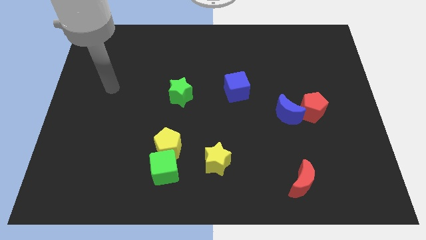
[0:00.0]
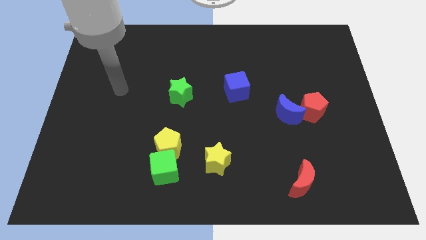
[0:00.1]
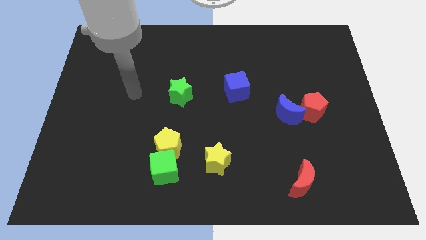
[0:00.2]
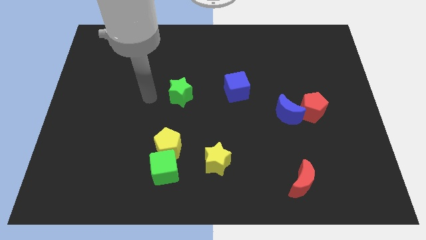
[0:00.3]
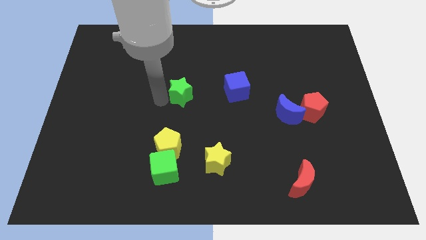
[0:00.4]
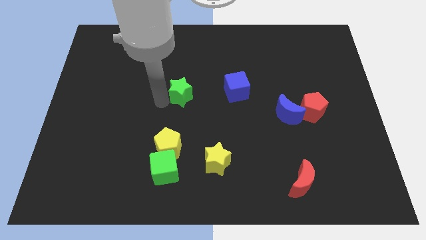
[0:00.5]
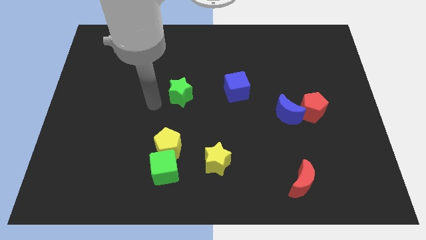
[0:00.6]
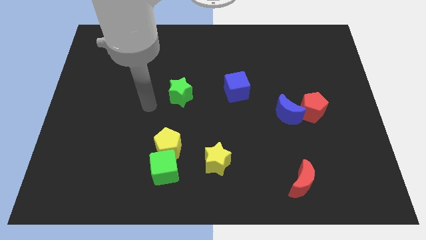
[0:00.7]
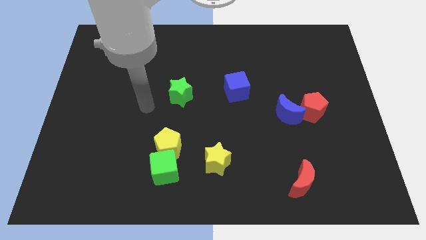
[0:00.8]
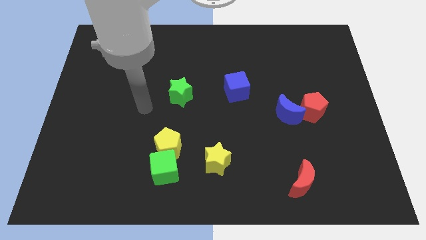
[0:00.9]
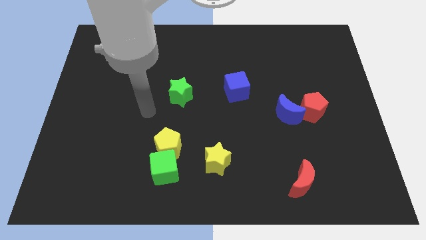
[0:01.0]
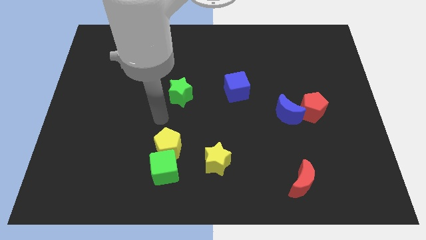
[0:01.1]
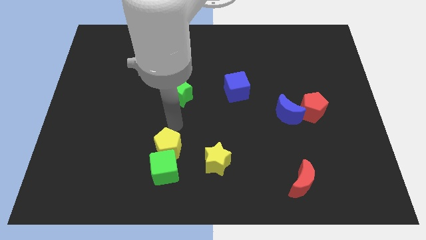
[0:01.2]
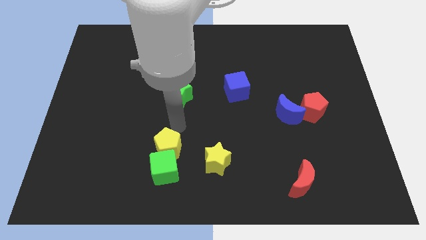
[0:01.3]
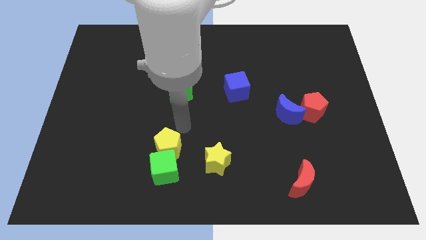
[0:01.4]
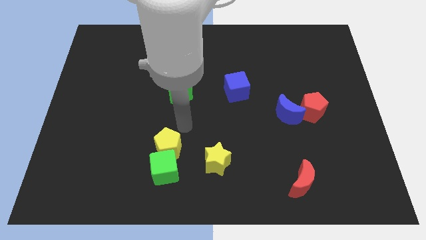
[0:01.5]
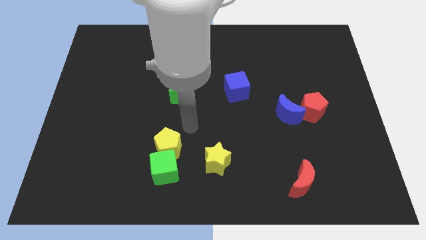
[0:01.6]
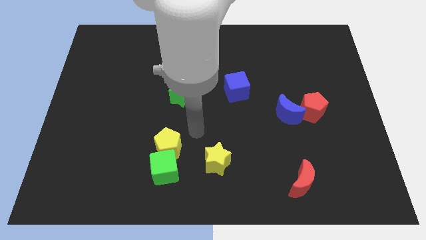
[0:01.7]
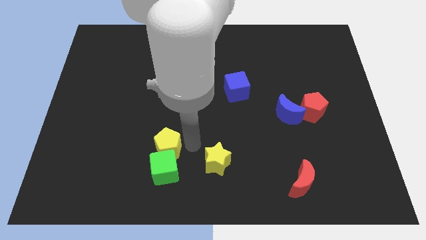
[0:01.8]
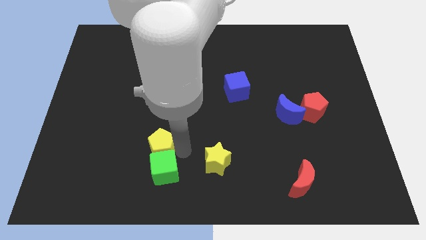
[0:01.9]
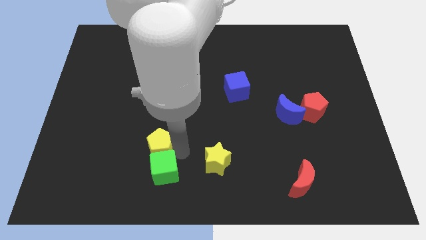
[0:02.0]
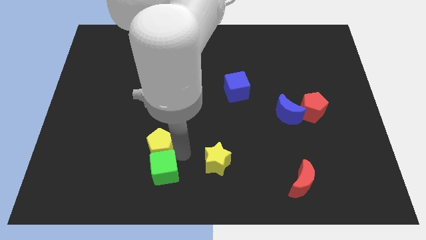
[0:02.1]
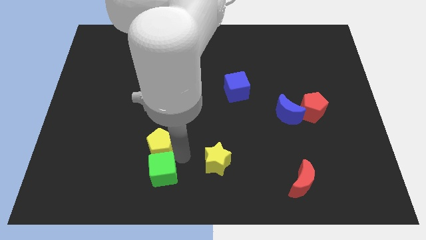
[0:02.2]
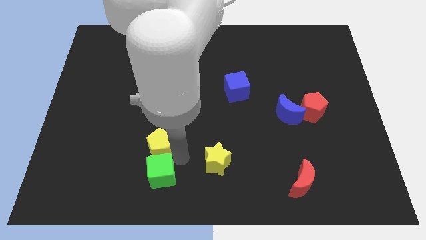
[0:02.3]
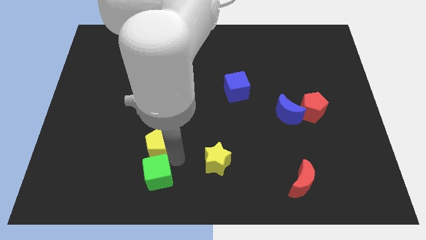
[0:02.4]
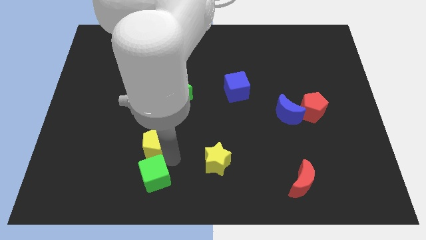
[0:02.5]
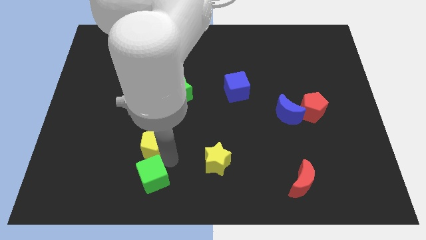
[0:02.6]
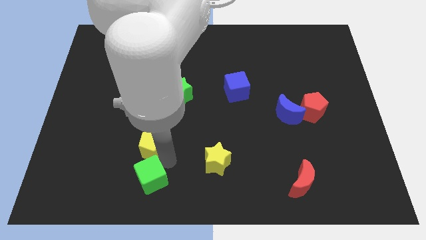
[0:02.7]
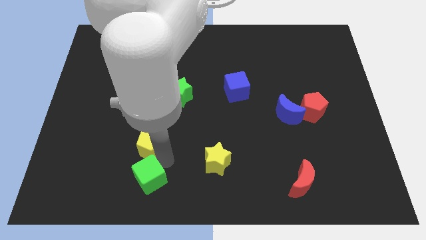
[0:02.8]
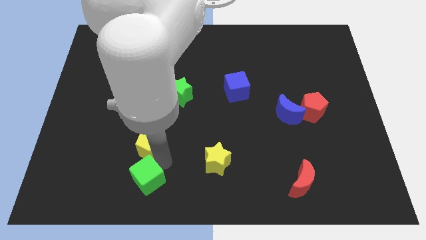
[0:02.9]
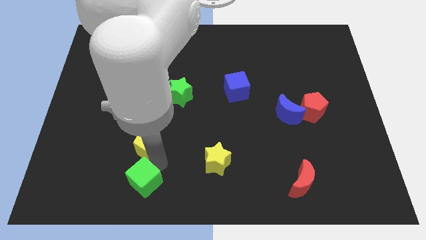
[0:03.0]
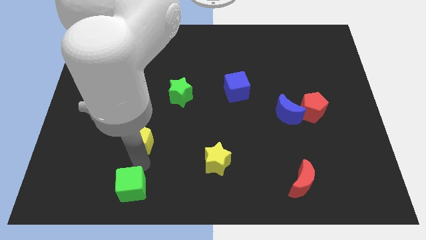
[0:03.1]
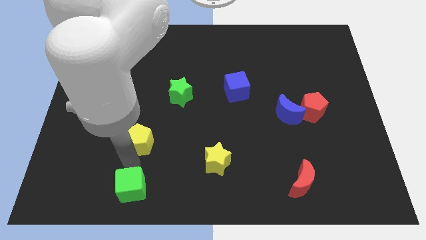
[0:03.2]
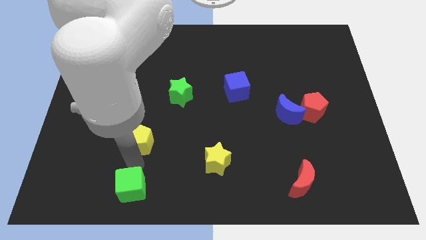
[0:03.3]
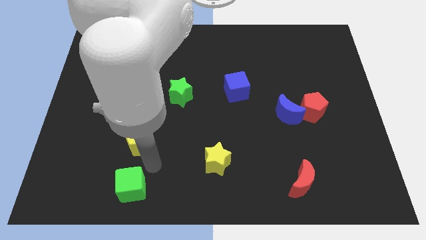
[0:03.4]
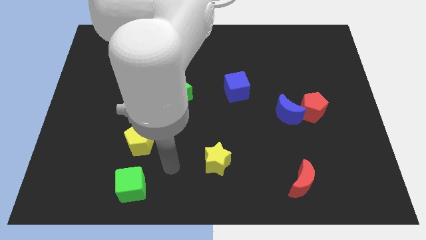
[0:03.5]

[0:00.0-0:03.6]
separate green cube and the yellow pentagon

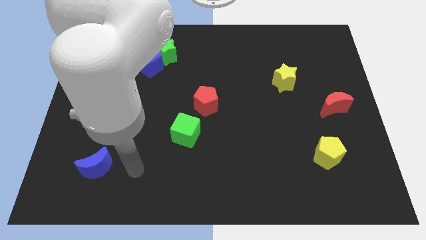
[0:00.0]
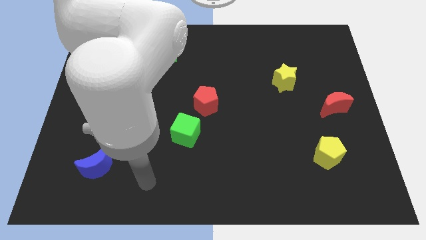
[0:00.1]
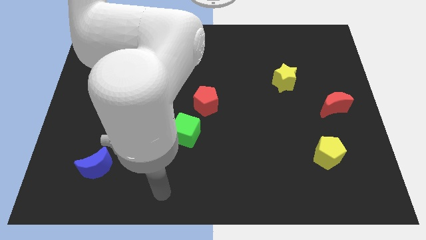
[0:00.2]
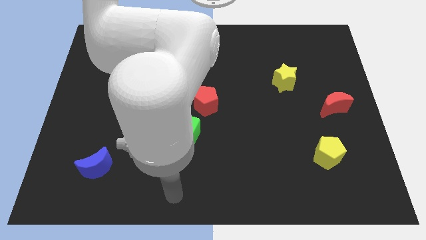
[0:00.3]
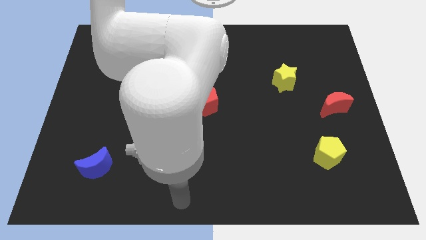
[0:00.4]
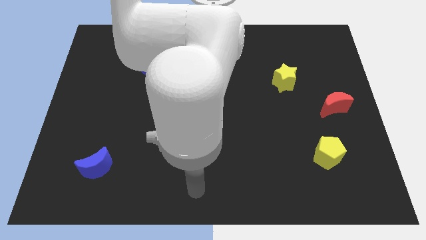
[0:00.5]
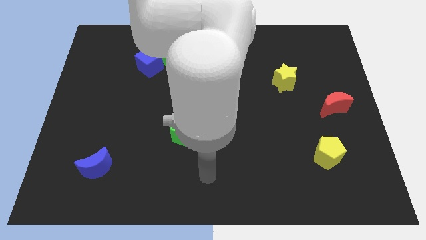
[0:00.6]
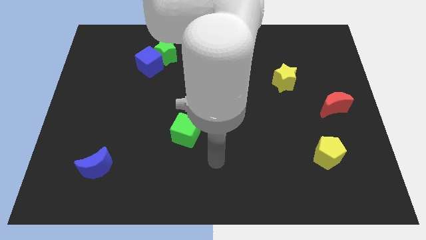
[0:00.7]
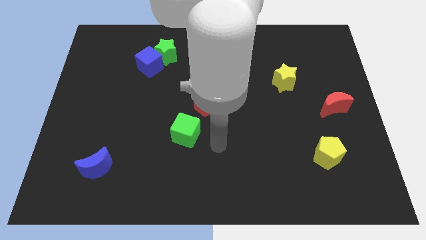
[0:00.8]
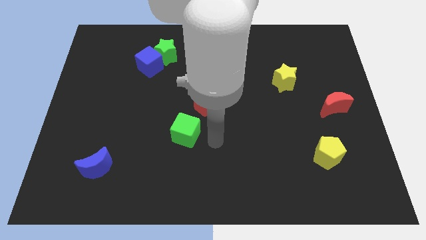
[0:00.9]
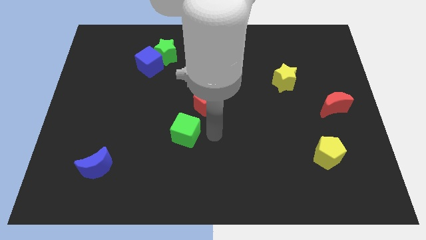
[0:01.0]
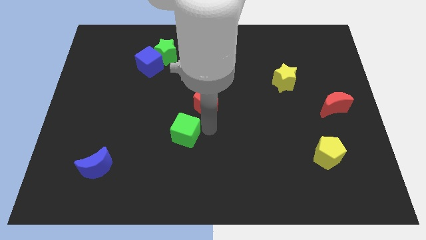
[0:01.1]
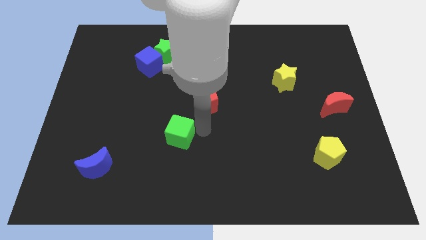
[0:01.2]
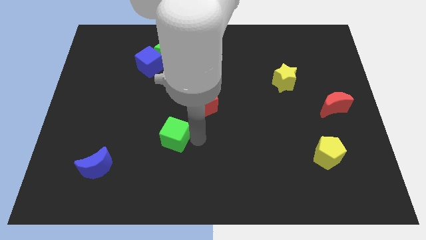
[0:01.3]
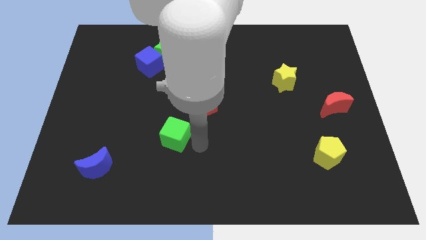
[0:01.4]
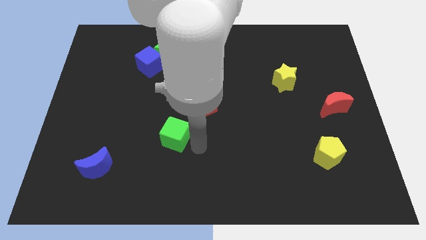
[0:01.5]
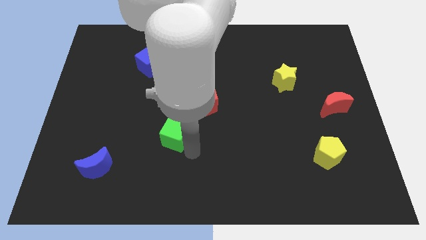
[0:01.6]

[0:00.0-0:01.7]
push the green cube slightly to the left

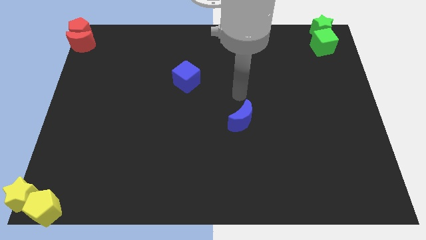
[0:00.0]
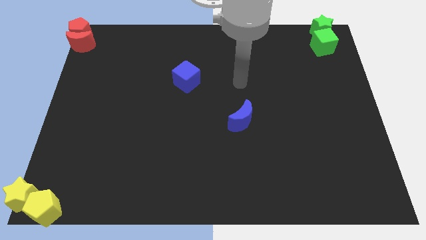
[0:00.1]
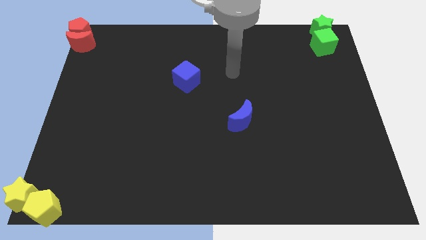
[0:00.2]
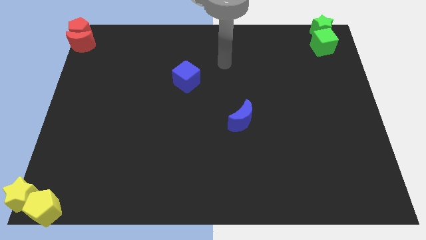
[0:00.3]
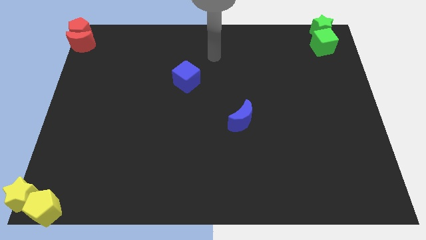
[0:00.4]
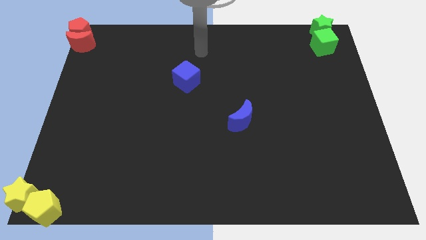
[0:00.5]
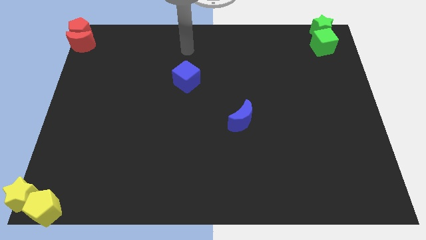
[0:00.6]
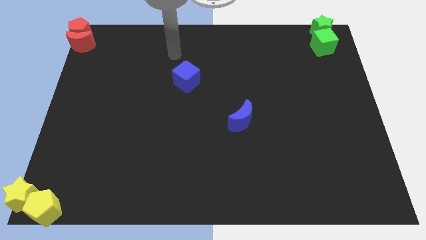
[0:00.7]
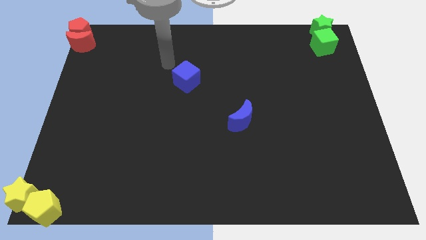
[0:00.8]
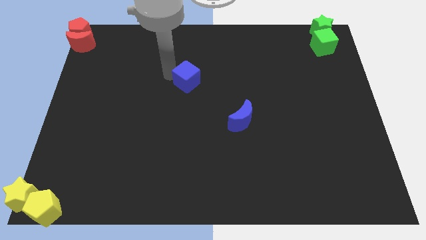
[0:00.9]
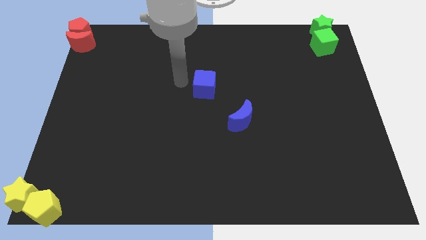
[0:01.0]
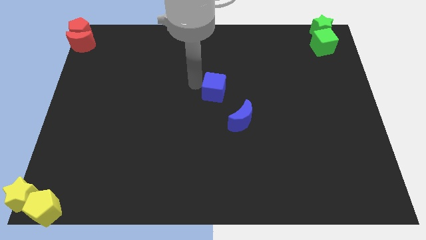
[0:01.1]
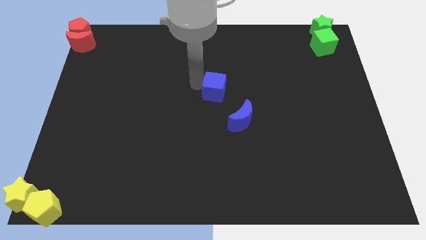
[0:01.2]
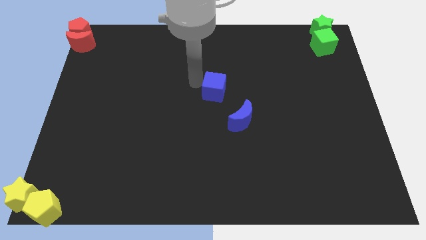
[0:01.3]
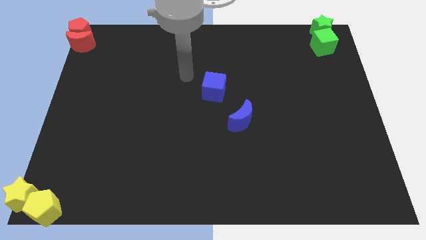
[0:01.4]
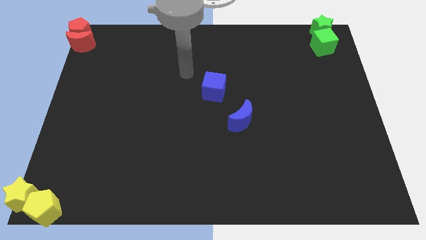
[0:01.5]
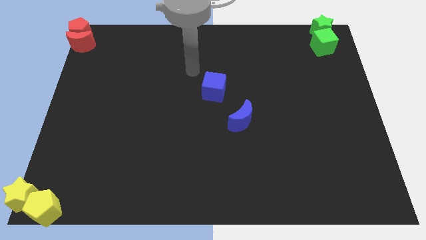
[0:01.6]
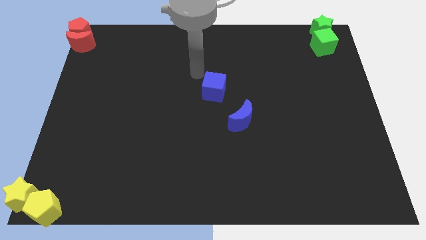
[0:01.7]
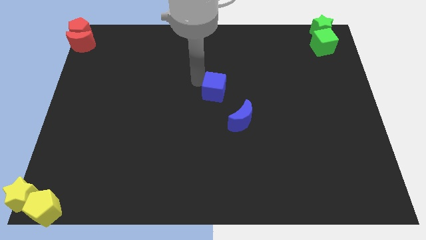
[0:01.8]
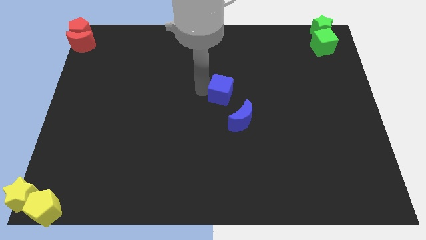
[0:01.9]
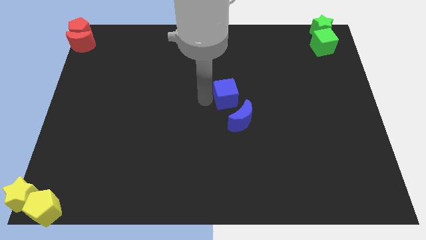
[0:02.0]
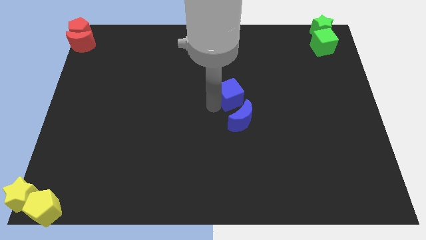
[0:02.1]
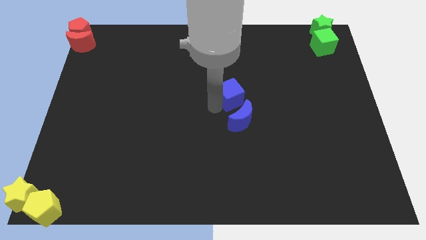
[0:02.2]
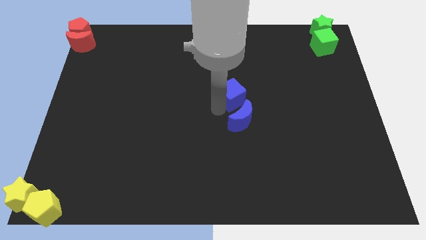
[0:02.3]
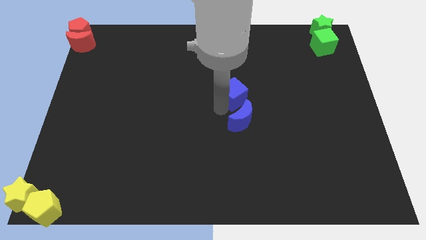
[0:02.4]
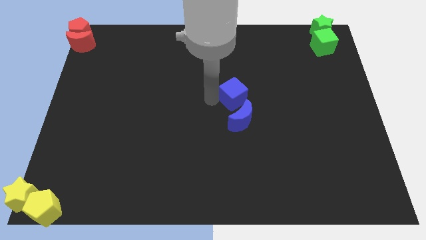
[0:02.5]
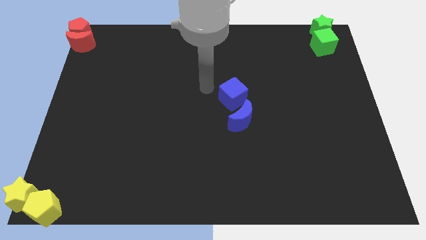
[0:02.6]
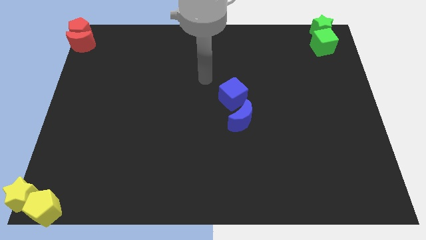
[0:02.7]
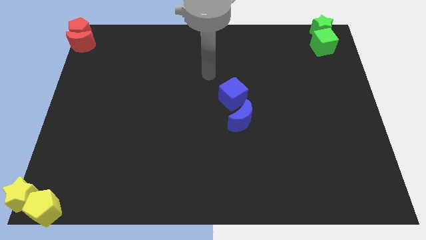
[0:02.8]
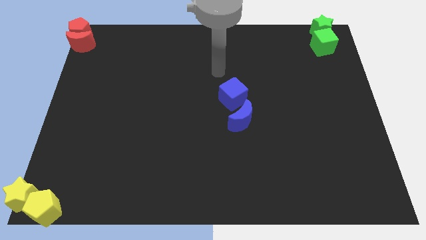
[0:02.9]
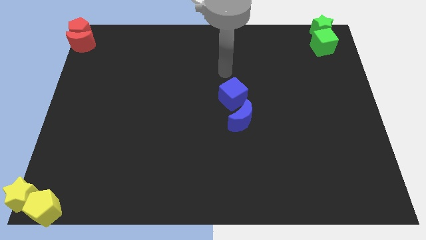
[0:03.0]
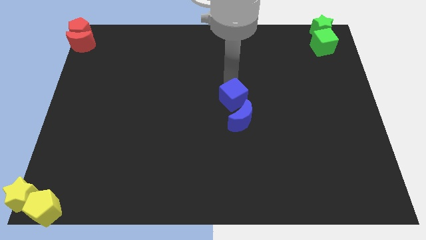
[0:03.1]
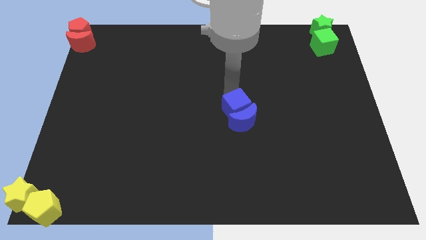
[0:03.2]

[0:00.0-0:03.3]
push the blue cube into the blue moon

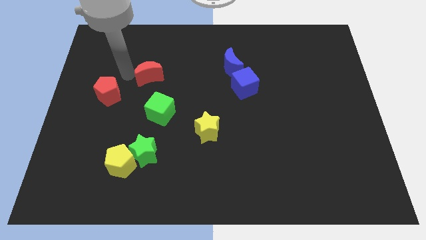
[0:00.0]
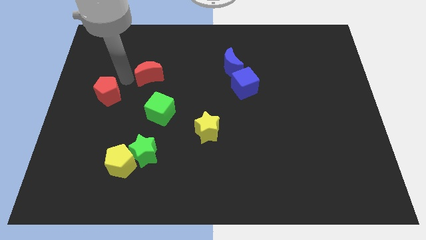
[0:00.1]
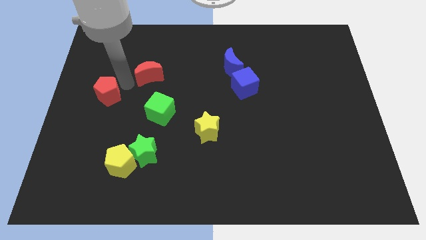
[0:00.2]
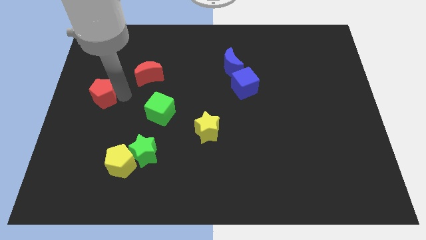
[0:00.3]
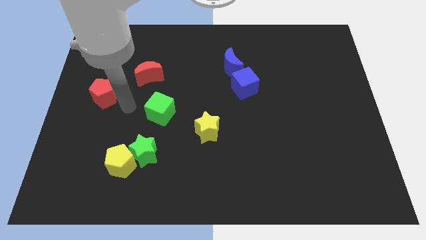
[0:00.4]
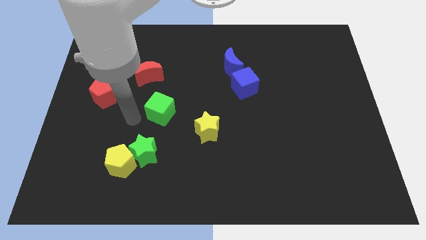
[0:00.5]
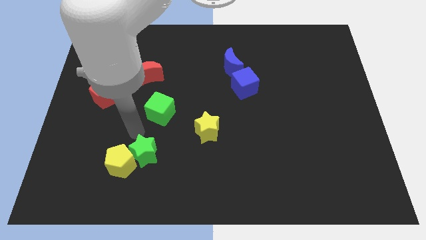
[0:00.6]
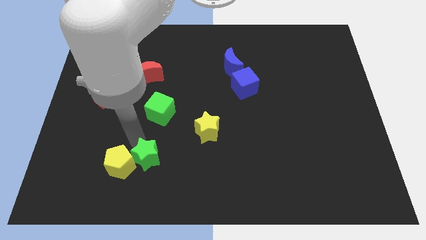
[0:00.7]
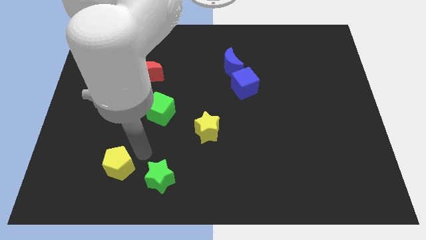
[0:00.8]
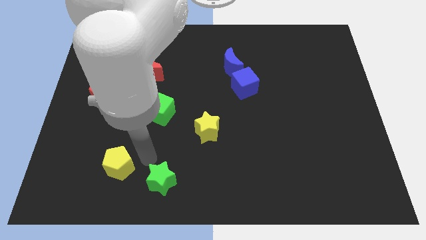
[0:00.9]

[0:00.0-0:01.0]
move green star from yellow pentagon
